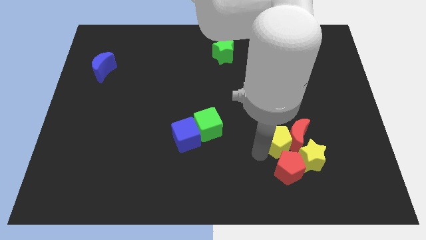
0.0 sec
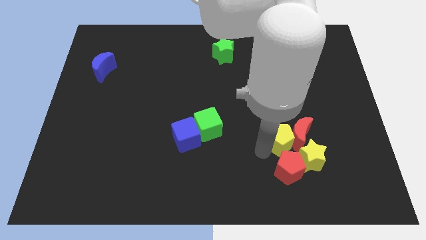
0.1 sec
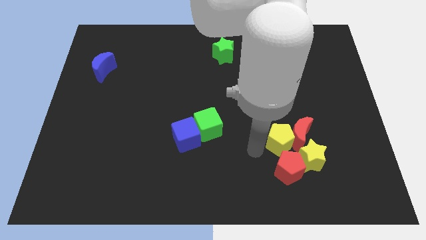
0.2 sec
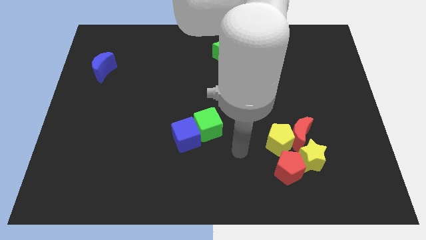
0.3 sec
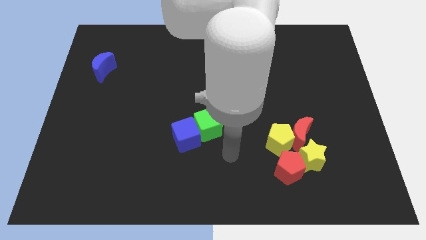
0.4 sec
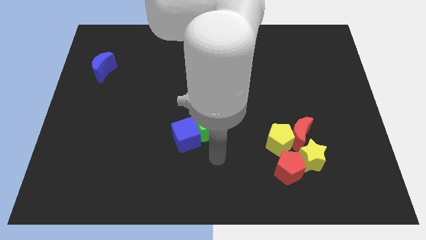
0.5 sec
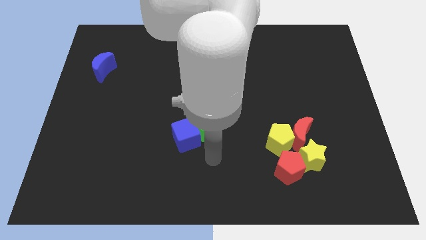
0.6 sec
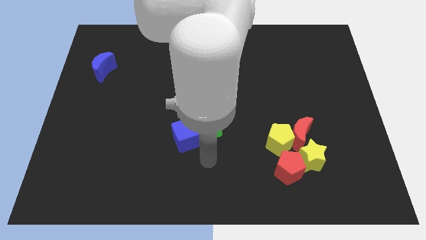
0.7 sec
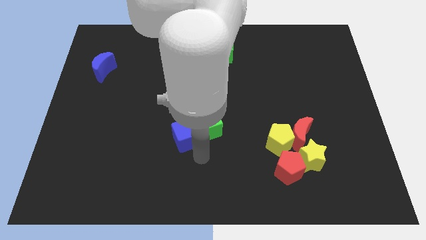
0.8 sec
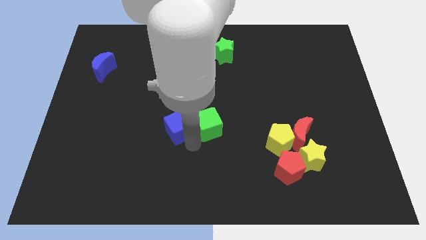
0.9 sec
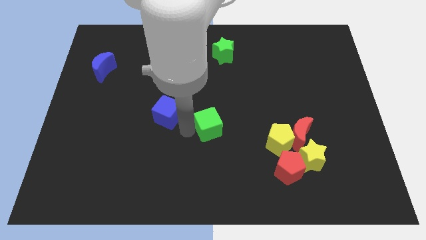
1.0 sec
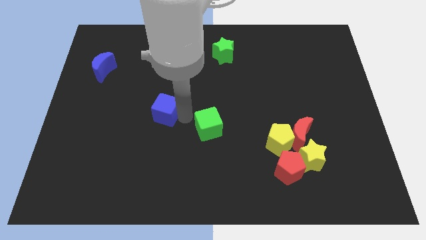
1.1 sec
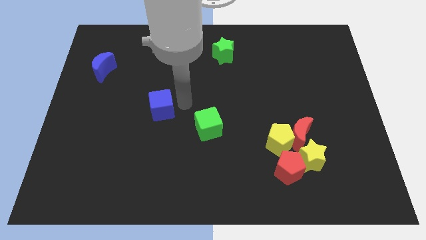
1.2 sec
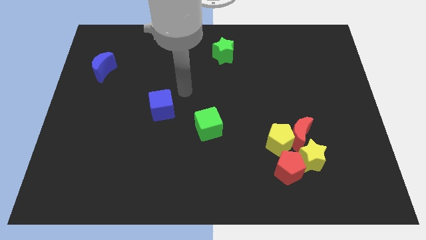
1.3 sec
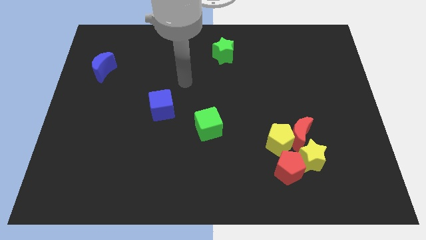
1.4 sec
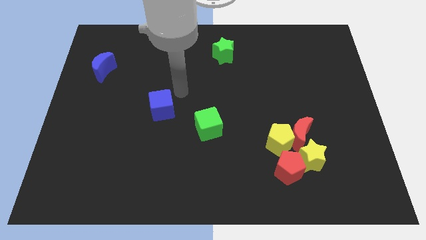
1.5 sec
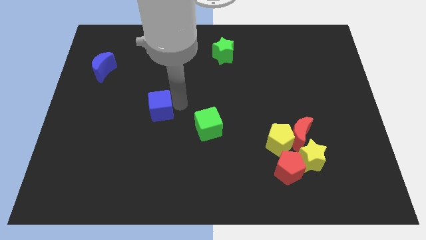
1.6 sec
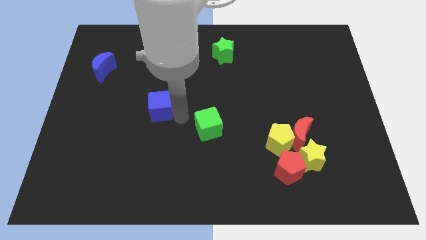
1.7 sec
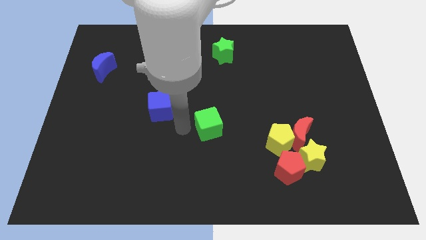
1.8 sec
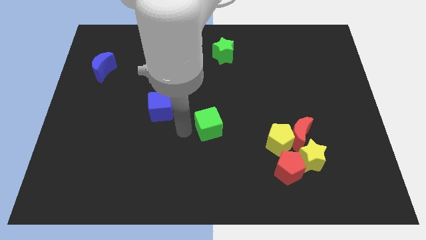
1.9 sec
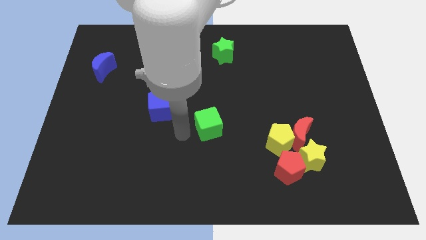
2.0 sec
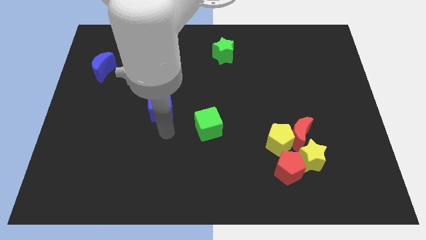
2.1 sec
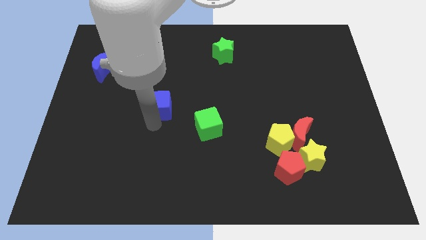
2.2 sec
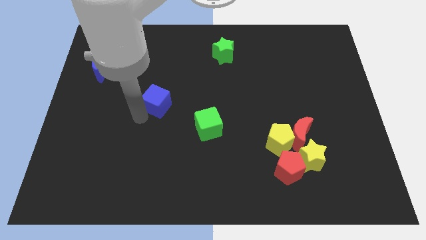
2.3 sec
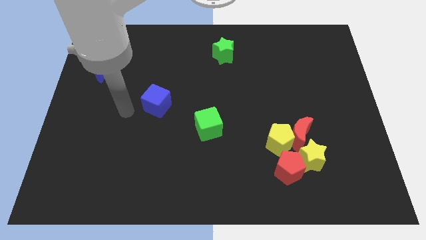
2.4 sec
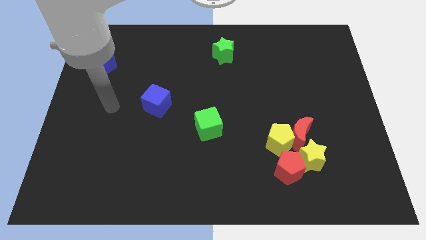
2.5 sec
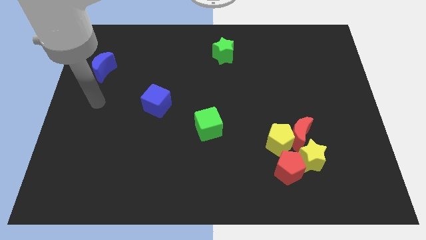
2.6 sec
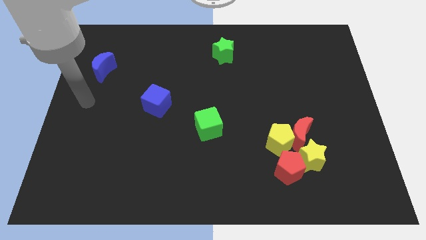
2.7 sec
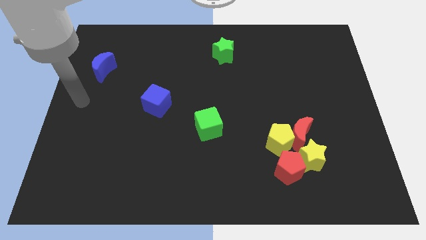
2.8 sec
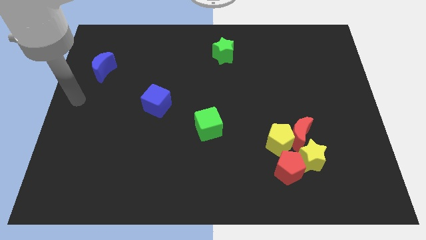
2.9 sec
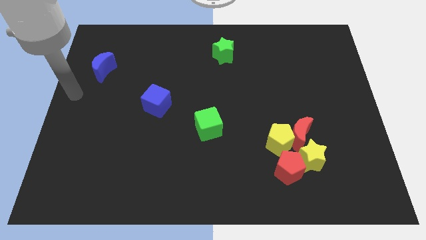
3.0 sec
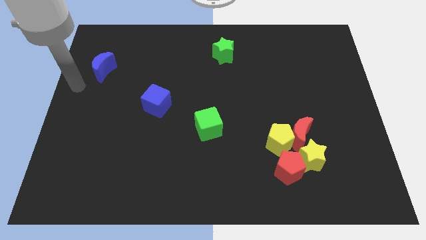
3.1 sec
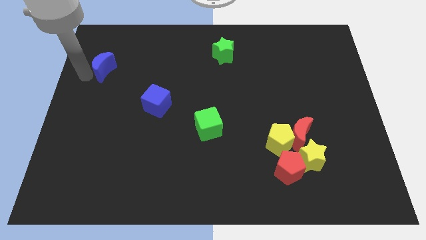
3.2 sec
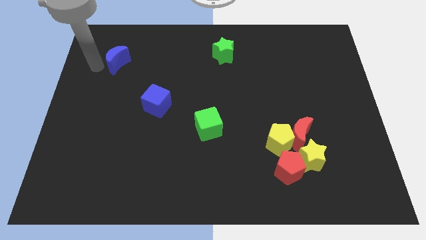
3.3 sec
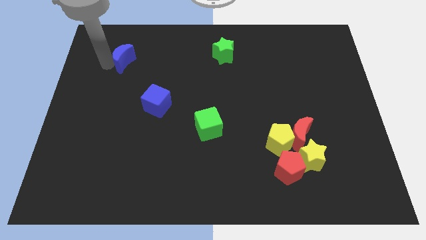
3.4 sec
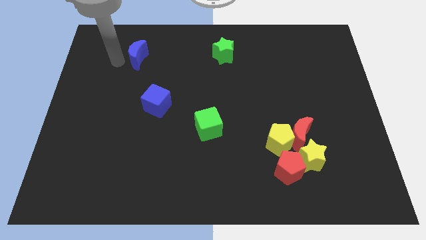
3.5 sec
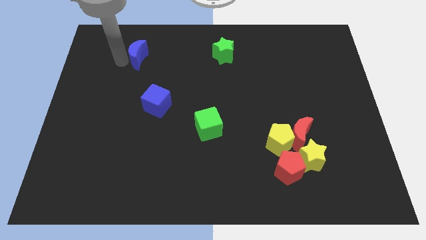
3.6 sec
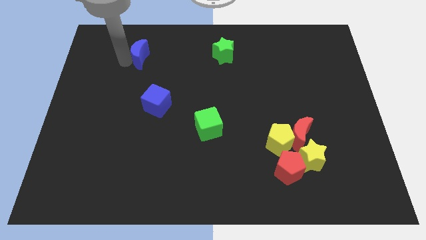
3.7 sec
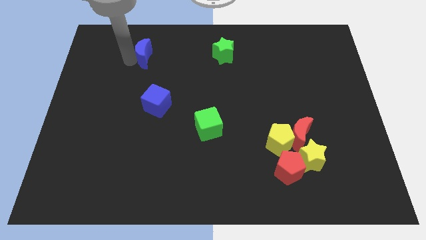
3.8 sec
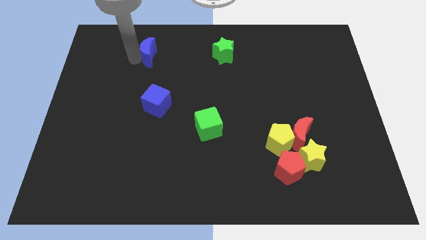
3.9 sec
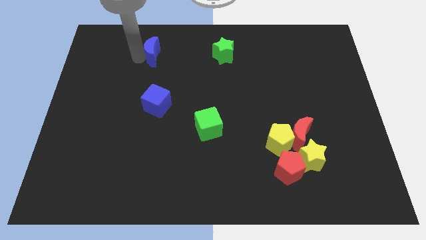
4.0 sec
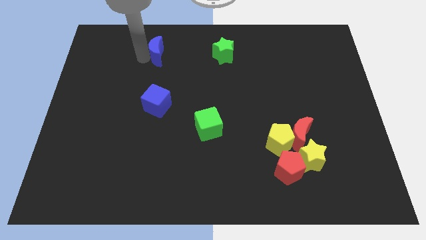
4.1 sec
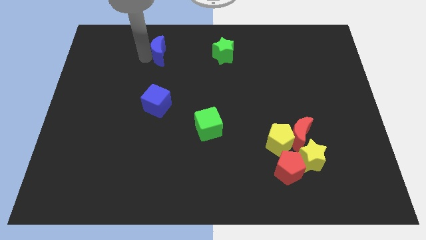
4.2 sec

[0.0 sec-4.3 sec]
place the blue blocks in a vertical line at the left side of the green blocks

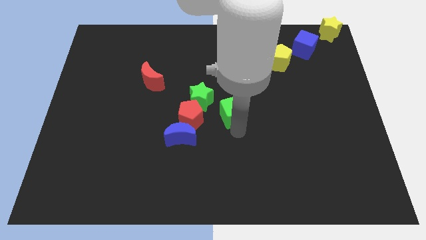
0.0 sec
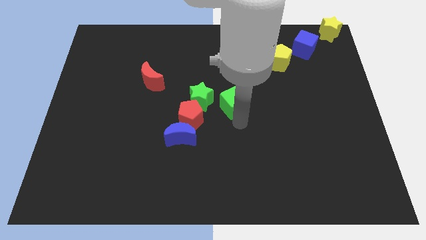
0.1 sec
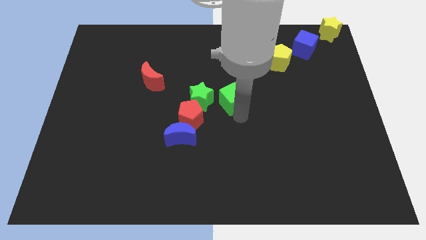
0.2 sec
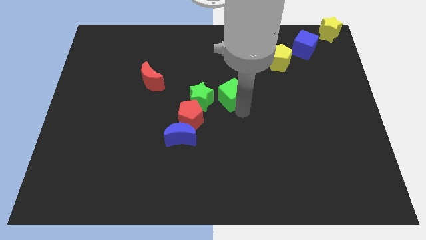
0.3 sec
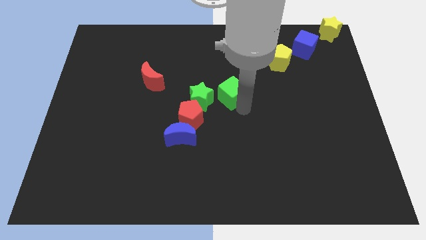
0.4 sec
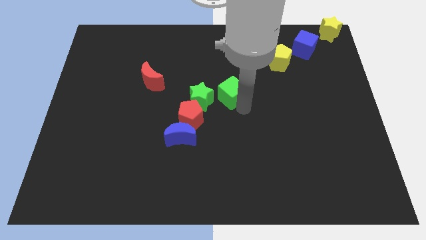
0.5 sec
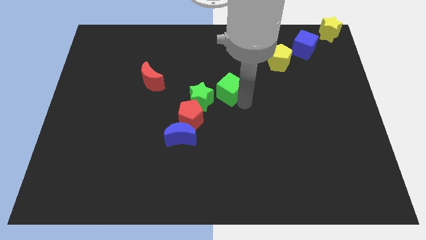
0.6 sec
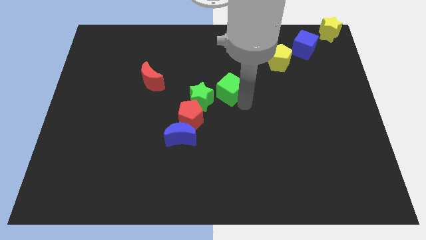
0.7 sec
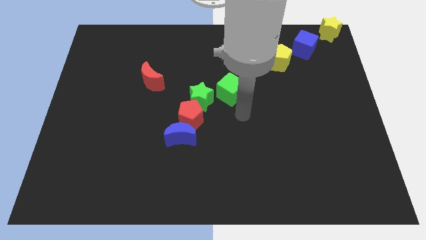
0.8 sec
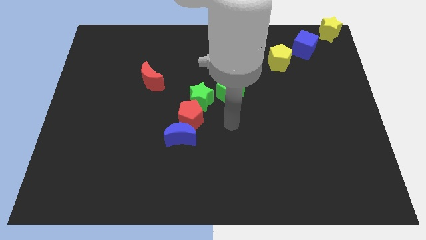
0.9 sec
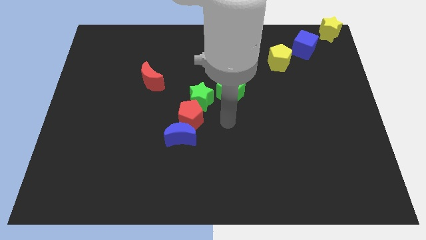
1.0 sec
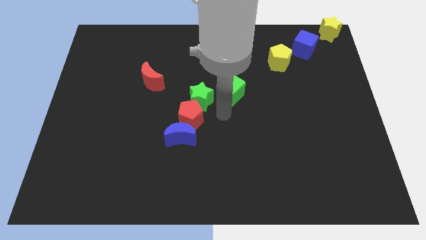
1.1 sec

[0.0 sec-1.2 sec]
move green cube slightly towards top side of the board

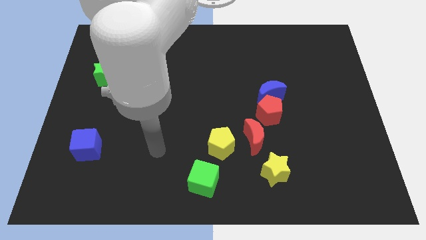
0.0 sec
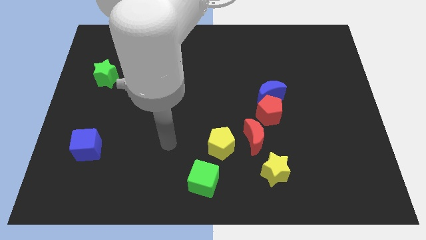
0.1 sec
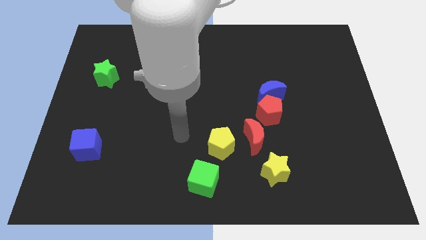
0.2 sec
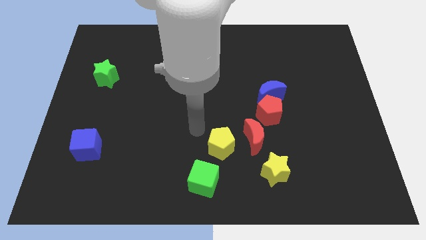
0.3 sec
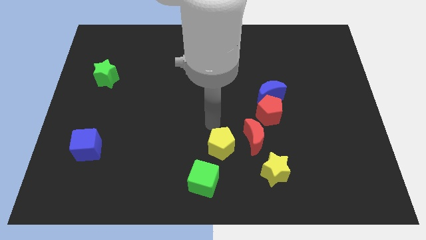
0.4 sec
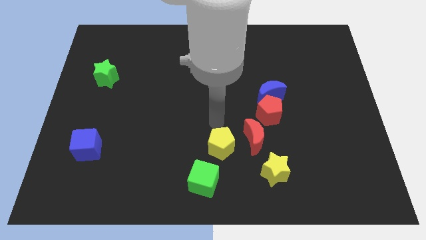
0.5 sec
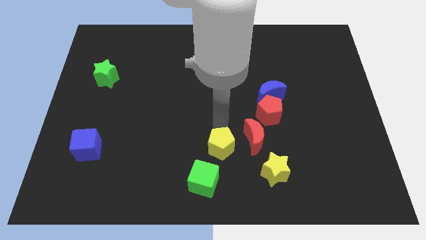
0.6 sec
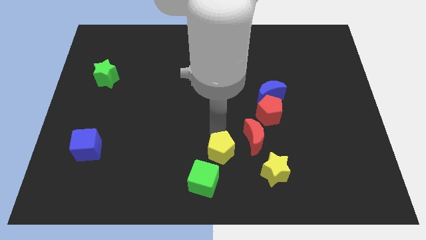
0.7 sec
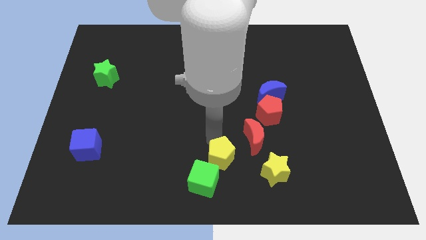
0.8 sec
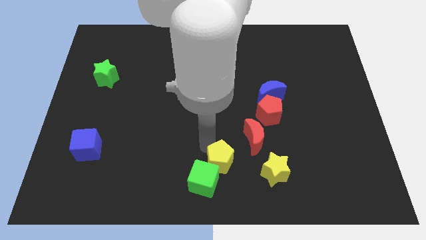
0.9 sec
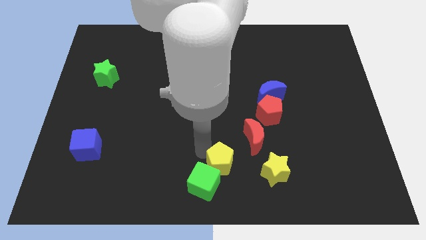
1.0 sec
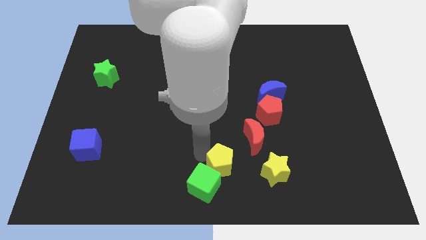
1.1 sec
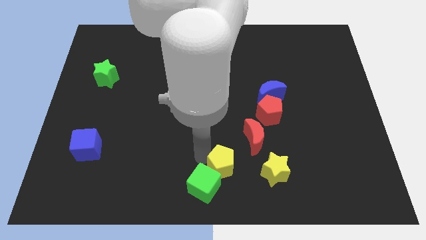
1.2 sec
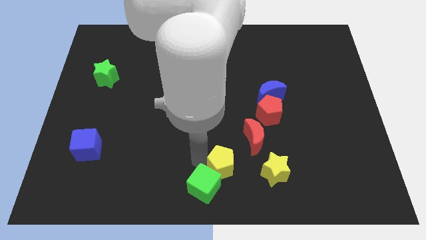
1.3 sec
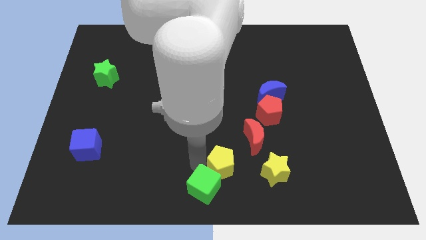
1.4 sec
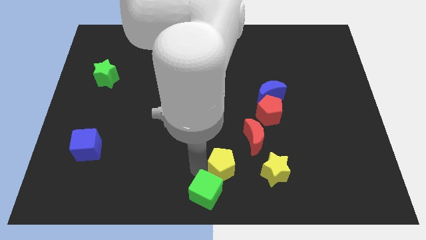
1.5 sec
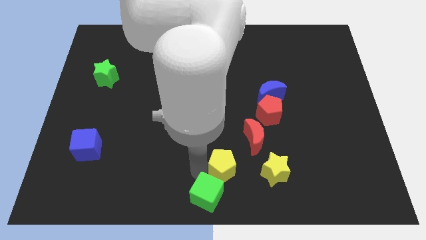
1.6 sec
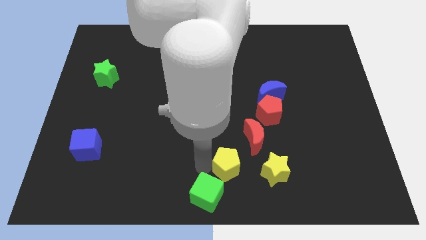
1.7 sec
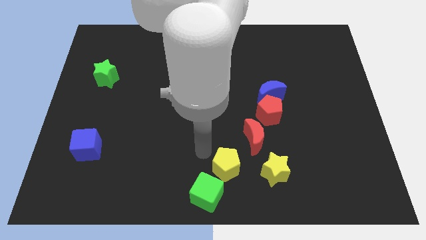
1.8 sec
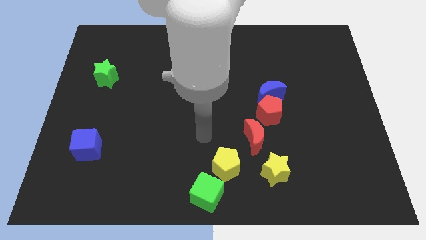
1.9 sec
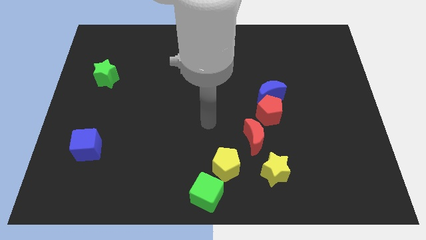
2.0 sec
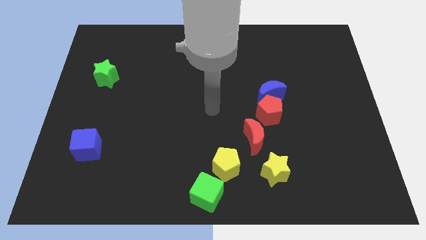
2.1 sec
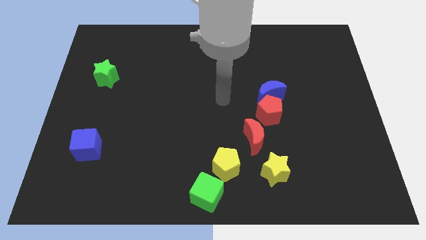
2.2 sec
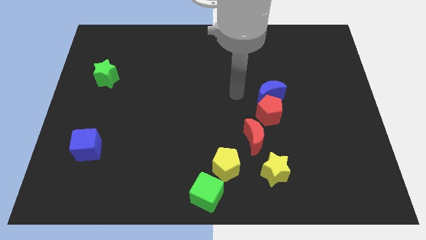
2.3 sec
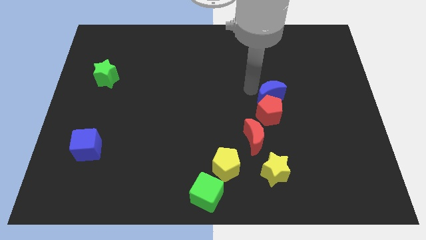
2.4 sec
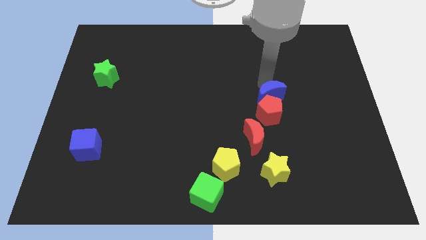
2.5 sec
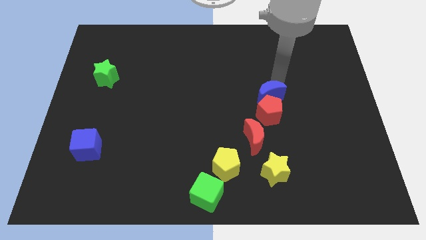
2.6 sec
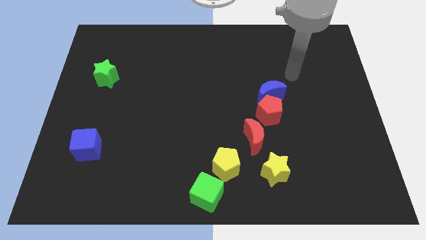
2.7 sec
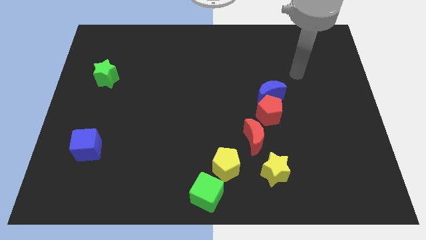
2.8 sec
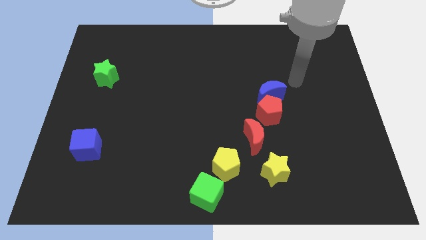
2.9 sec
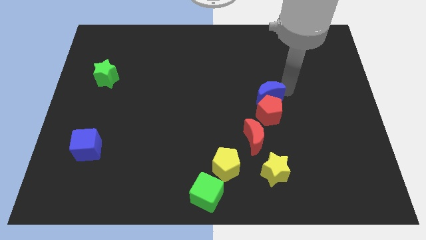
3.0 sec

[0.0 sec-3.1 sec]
slightly push the yellow pentagon towards green cube so that it touches each other

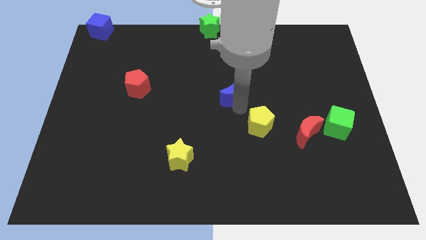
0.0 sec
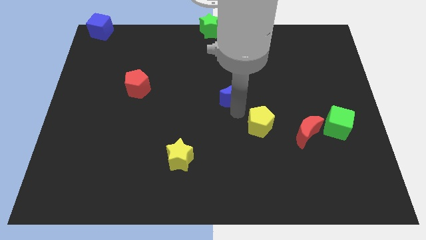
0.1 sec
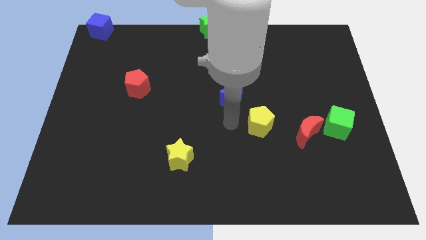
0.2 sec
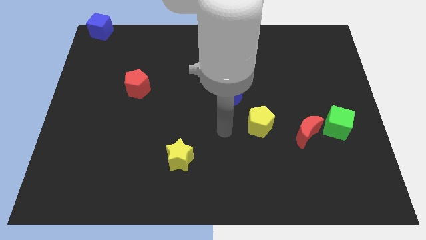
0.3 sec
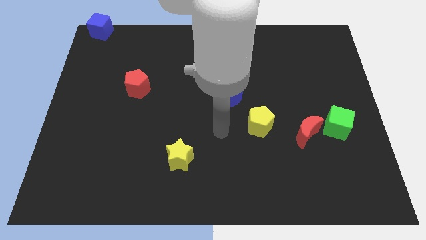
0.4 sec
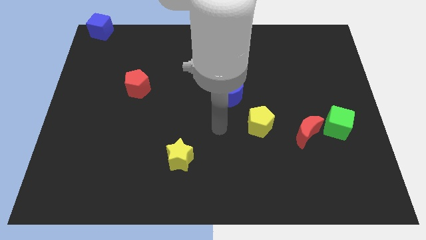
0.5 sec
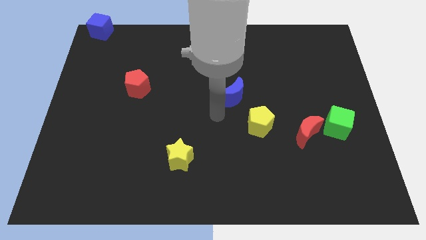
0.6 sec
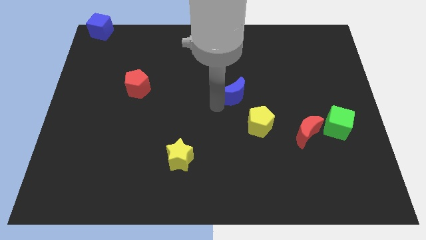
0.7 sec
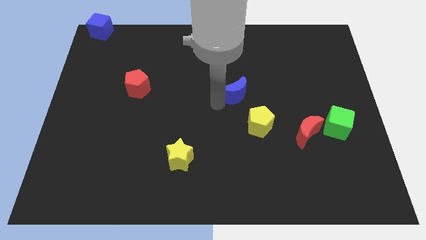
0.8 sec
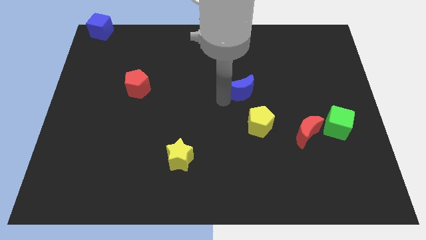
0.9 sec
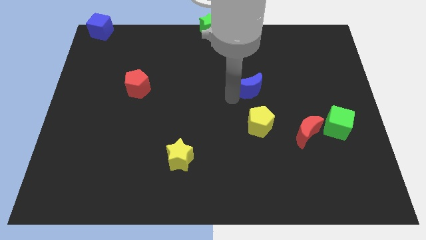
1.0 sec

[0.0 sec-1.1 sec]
push blue crescent above yellow pentagon
